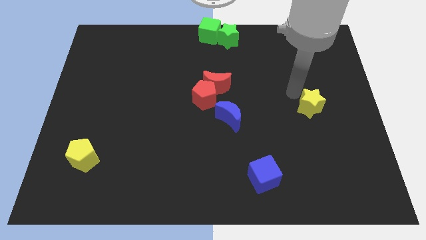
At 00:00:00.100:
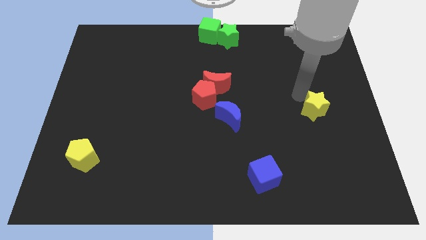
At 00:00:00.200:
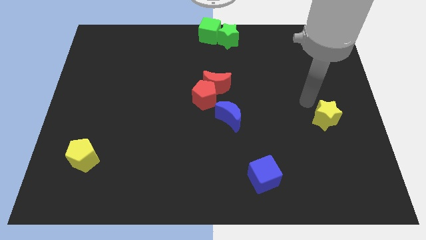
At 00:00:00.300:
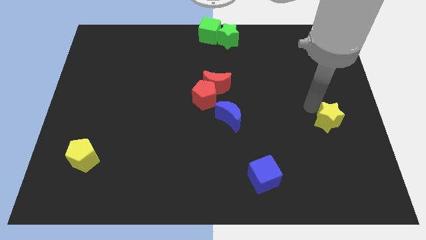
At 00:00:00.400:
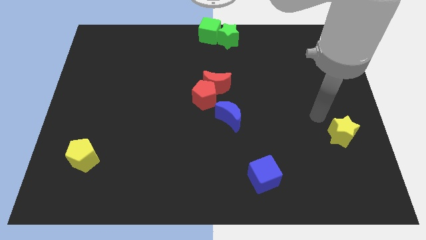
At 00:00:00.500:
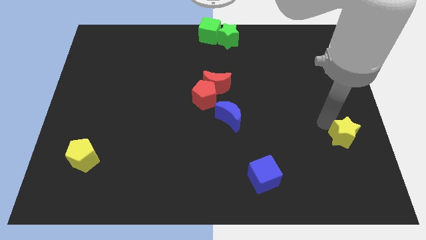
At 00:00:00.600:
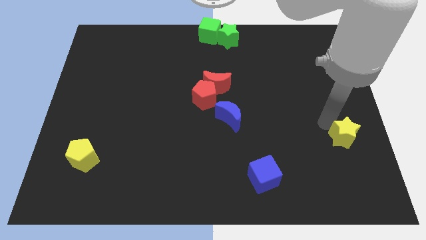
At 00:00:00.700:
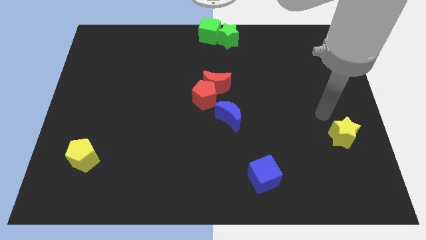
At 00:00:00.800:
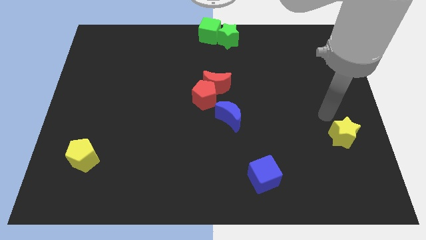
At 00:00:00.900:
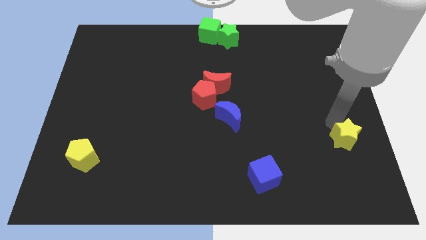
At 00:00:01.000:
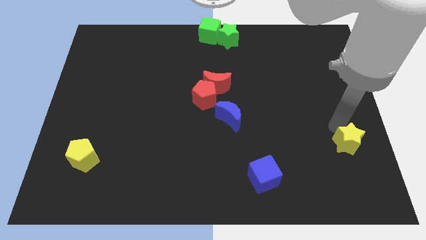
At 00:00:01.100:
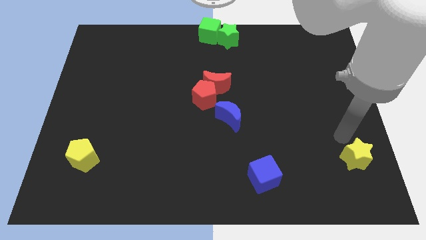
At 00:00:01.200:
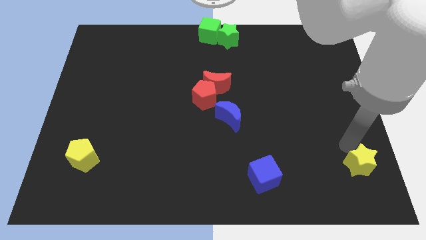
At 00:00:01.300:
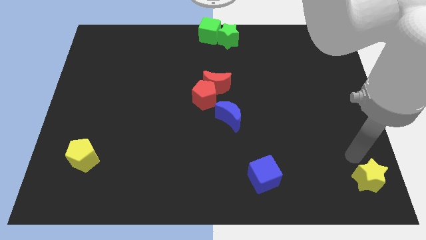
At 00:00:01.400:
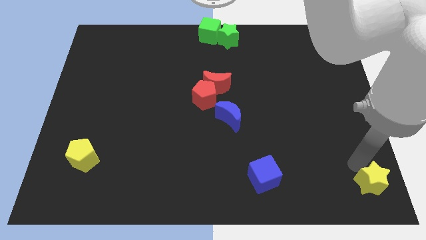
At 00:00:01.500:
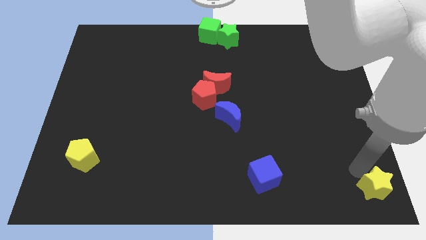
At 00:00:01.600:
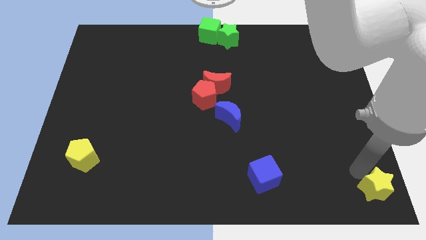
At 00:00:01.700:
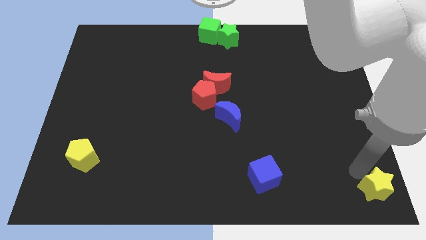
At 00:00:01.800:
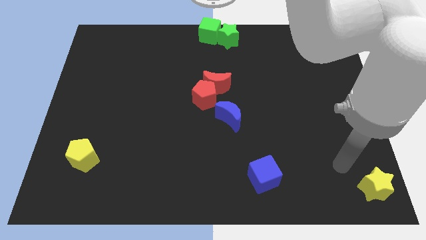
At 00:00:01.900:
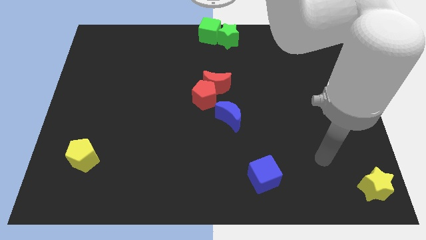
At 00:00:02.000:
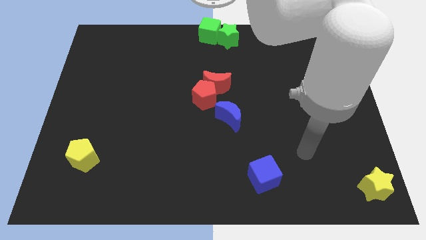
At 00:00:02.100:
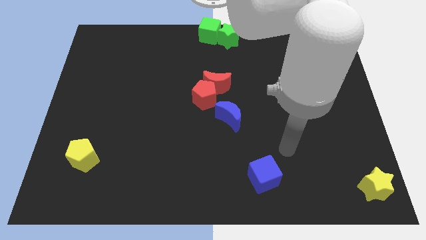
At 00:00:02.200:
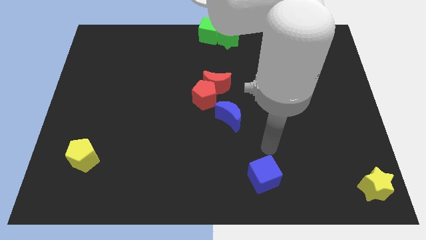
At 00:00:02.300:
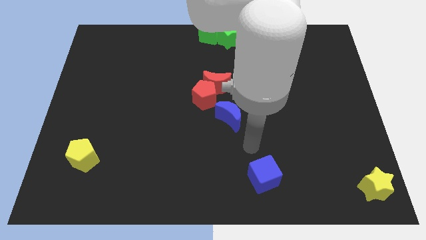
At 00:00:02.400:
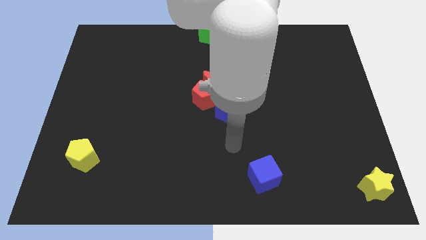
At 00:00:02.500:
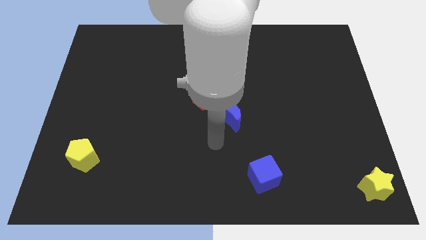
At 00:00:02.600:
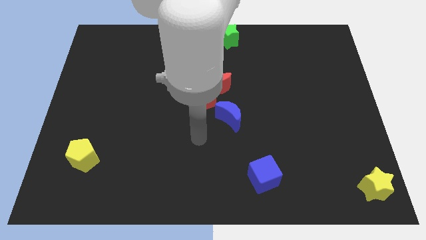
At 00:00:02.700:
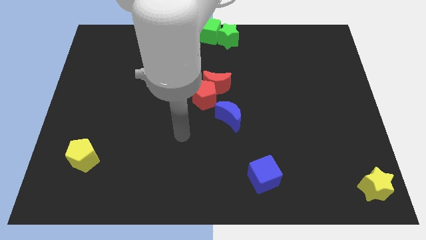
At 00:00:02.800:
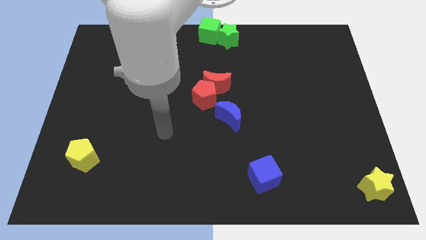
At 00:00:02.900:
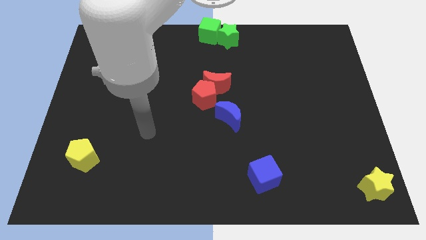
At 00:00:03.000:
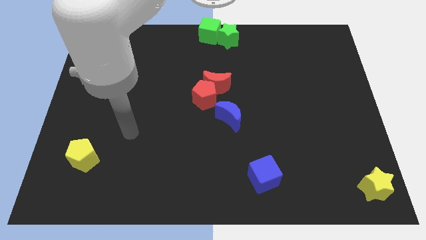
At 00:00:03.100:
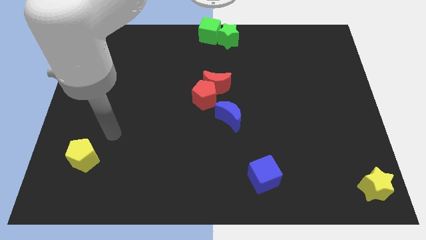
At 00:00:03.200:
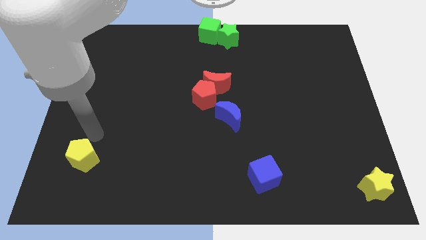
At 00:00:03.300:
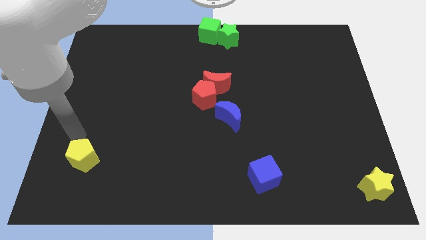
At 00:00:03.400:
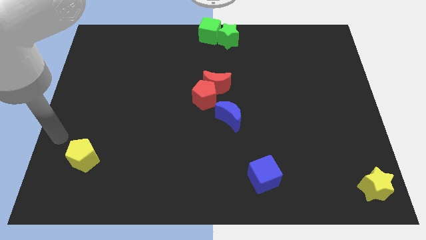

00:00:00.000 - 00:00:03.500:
place the yellow star at the bottom right corner of the board

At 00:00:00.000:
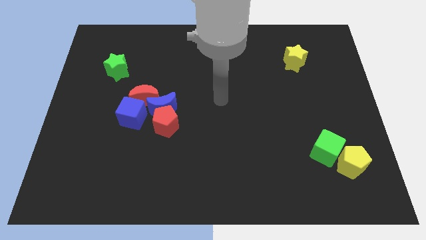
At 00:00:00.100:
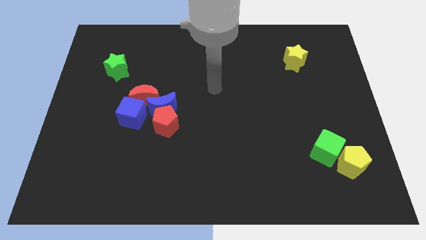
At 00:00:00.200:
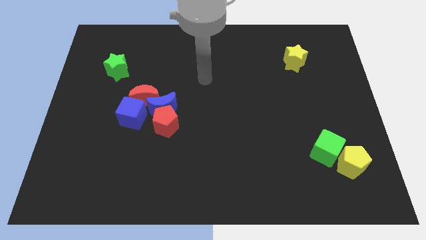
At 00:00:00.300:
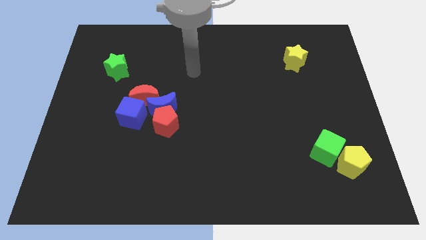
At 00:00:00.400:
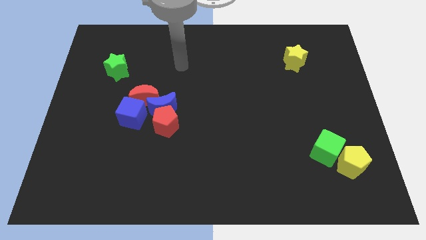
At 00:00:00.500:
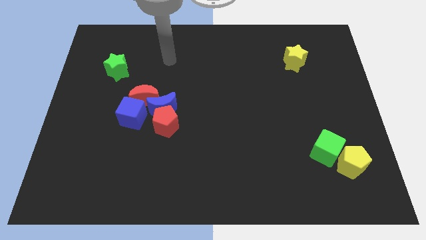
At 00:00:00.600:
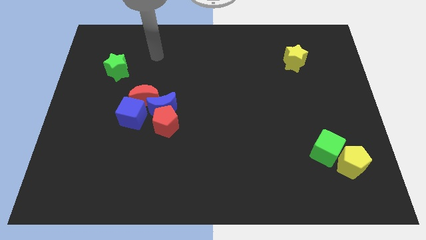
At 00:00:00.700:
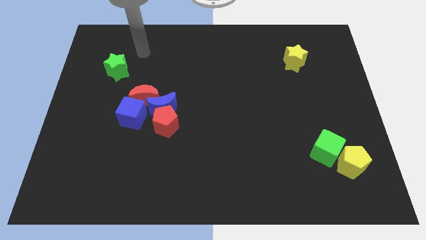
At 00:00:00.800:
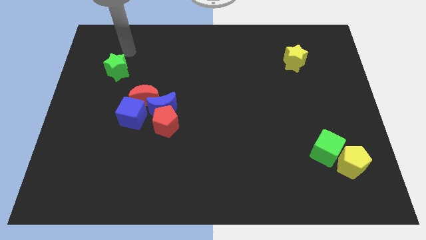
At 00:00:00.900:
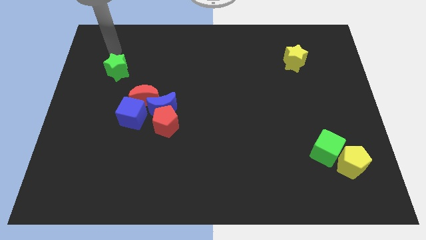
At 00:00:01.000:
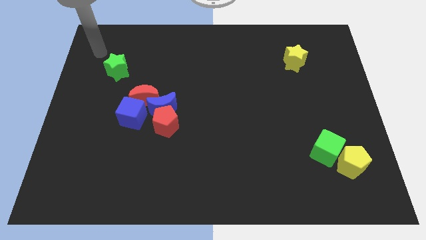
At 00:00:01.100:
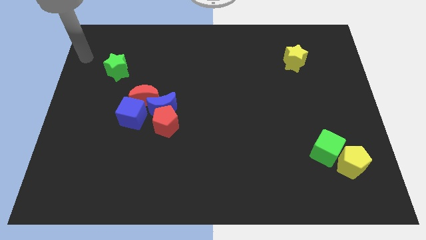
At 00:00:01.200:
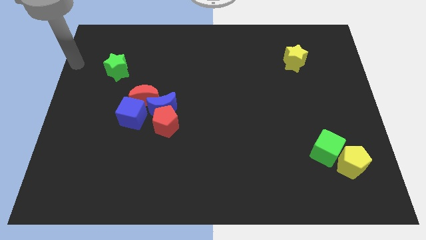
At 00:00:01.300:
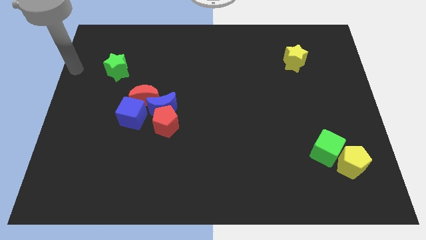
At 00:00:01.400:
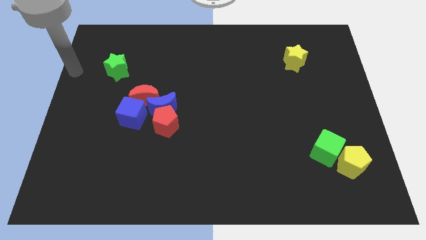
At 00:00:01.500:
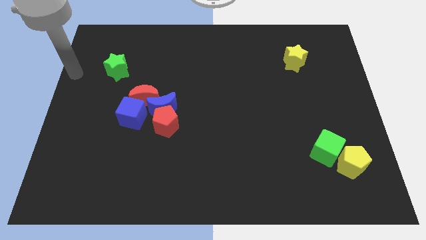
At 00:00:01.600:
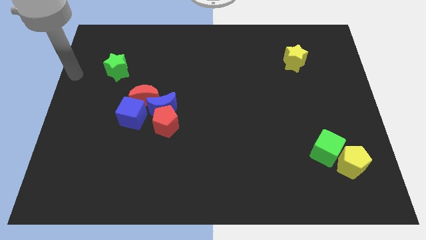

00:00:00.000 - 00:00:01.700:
place your arm to the left of green star

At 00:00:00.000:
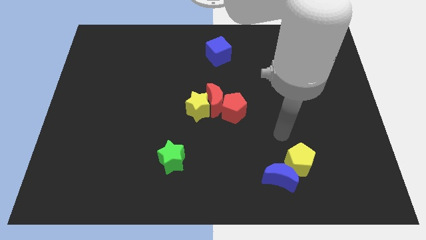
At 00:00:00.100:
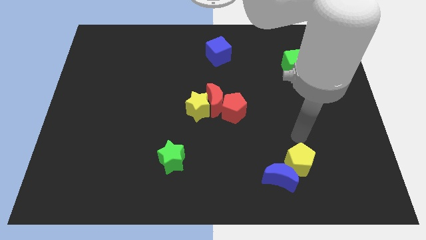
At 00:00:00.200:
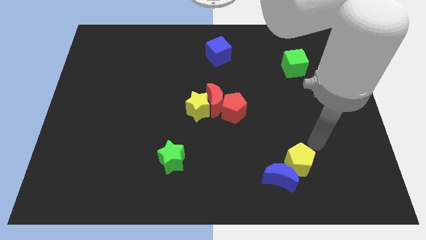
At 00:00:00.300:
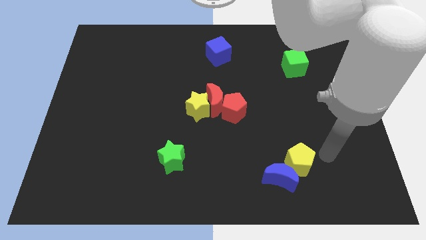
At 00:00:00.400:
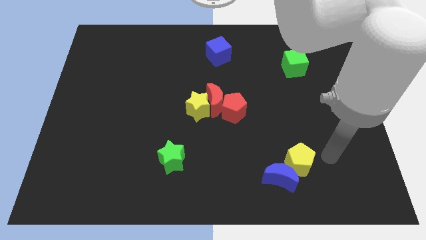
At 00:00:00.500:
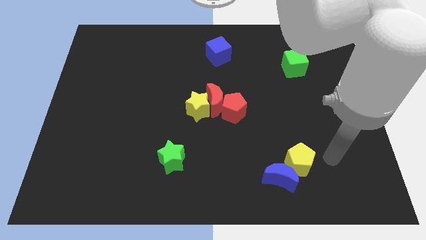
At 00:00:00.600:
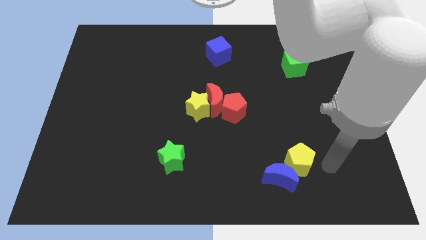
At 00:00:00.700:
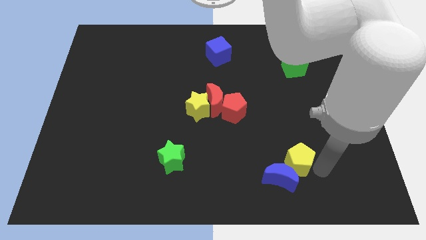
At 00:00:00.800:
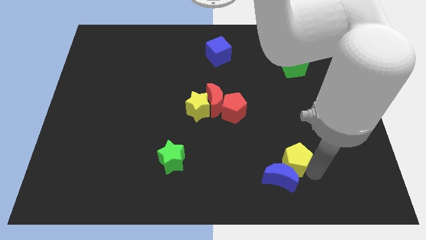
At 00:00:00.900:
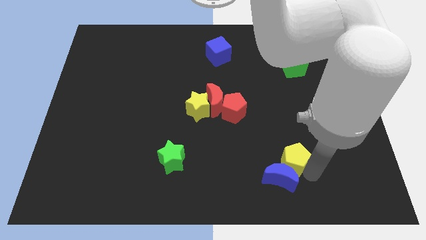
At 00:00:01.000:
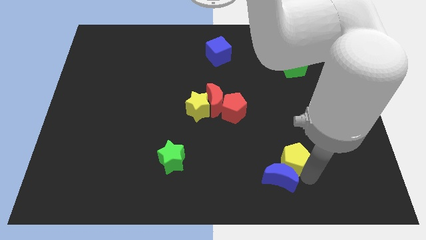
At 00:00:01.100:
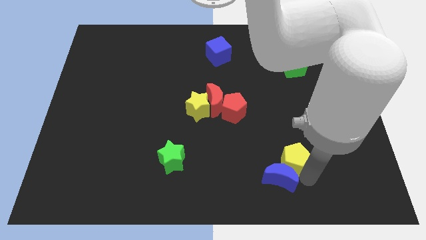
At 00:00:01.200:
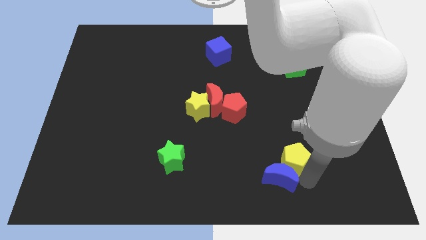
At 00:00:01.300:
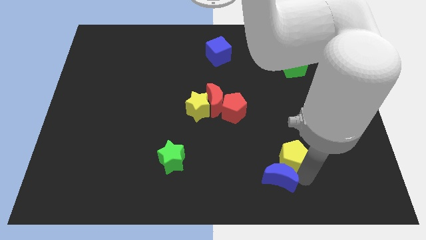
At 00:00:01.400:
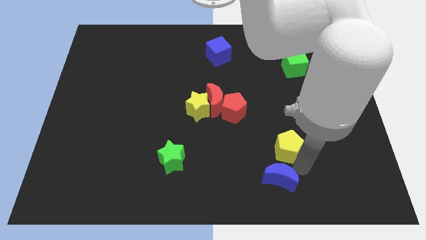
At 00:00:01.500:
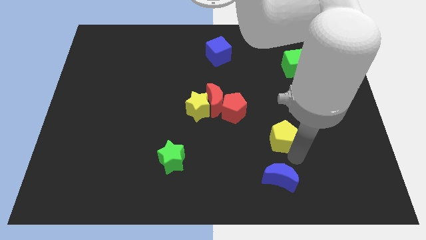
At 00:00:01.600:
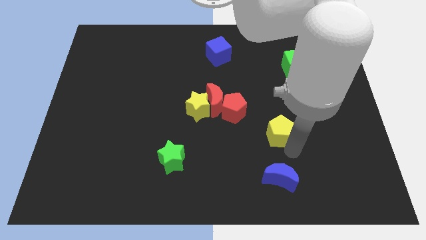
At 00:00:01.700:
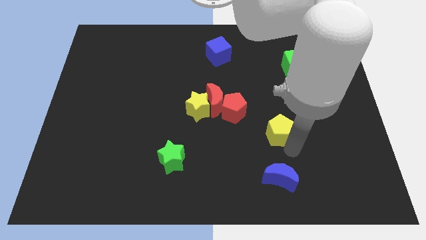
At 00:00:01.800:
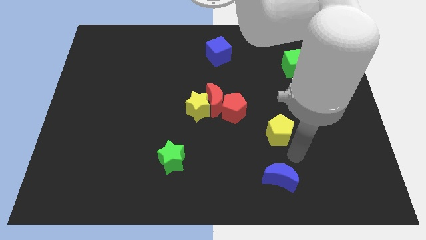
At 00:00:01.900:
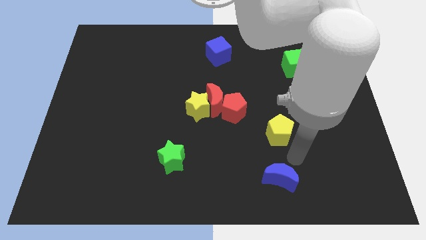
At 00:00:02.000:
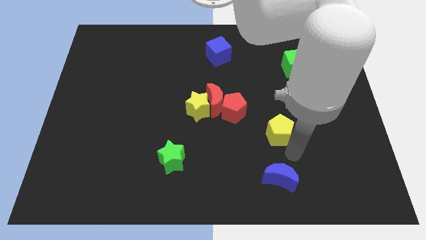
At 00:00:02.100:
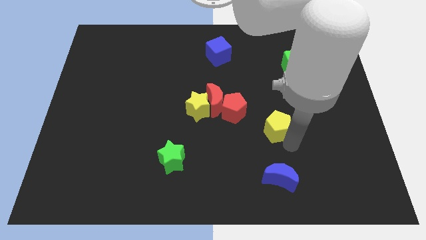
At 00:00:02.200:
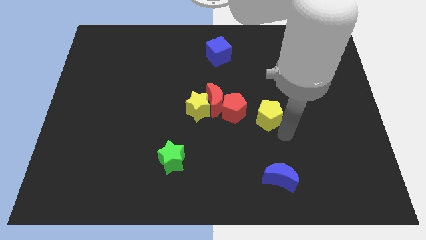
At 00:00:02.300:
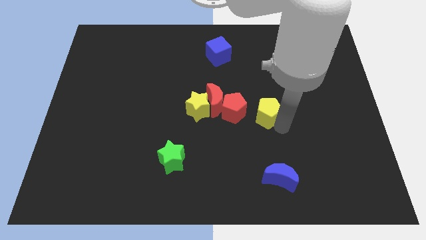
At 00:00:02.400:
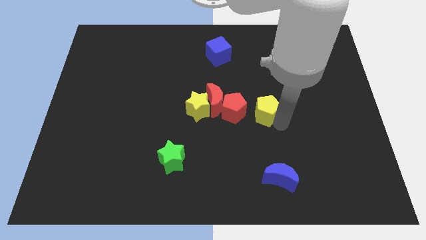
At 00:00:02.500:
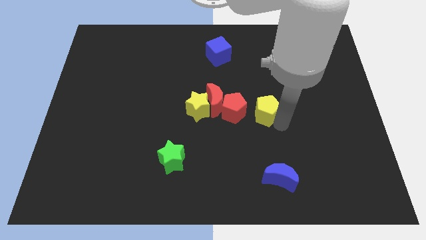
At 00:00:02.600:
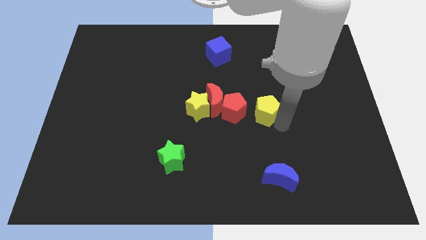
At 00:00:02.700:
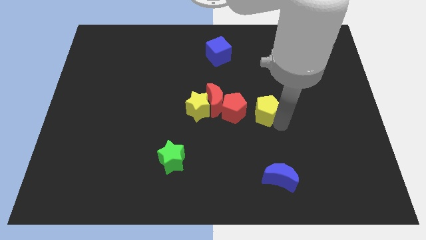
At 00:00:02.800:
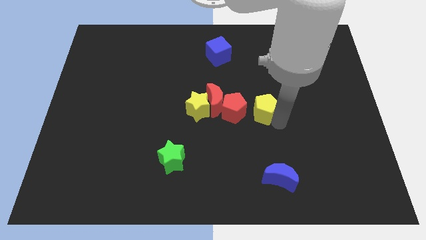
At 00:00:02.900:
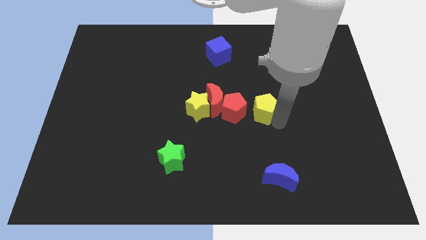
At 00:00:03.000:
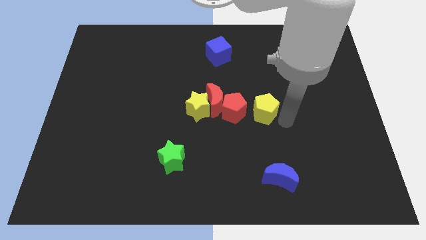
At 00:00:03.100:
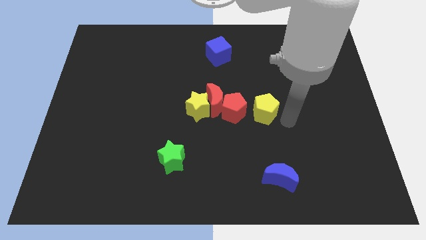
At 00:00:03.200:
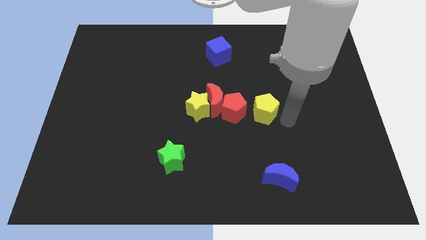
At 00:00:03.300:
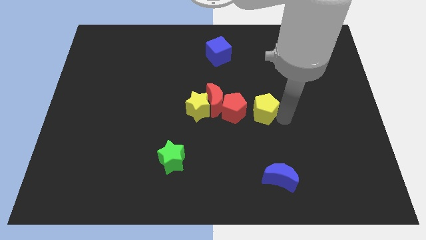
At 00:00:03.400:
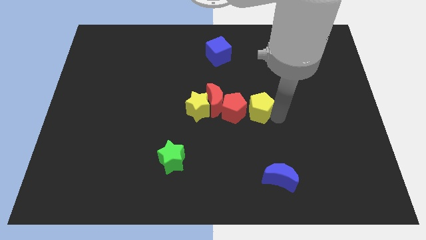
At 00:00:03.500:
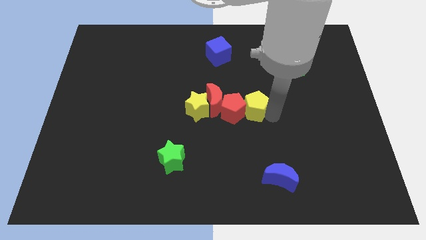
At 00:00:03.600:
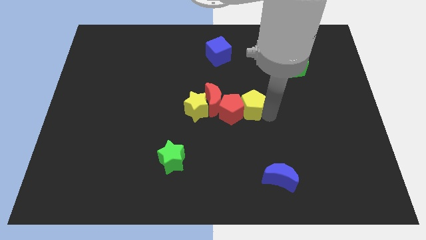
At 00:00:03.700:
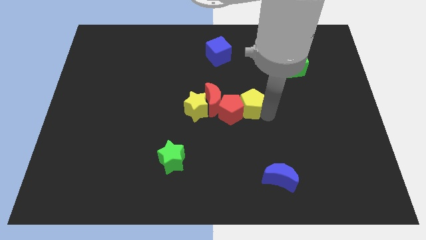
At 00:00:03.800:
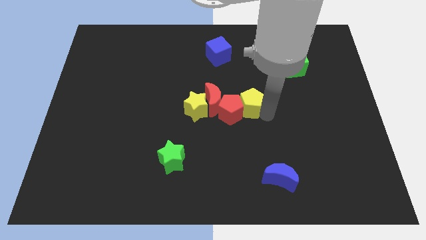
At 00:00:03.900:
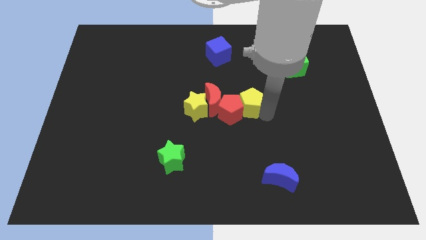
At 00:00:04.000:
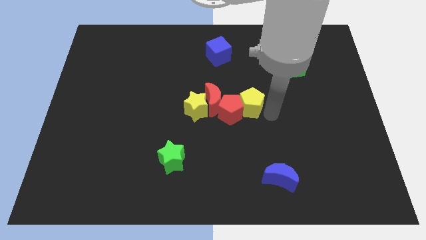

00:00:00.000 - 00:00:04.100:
place yellow pentagon to the right of red pentagon
